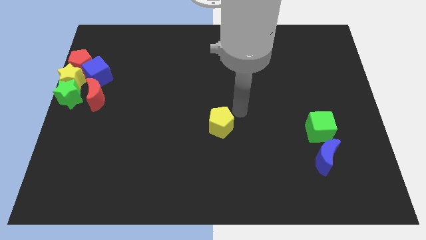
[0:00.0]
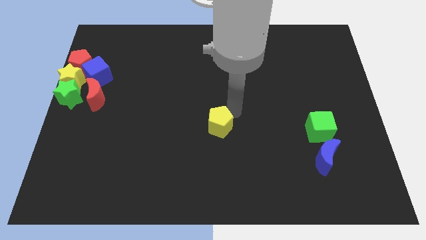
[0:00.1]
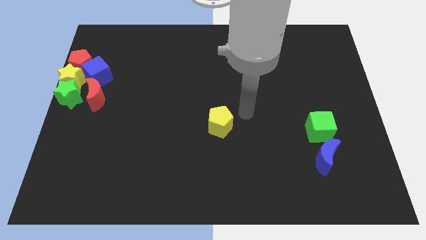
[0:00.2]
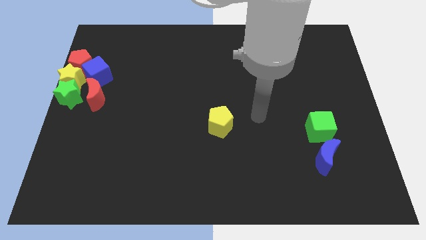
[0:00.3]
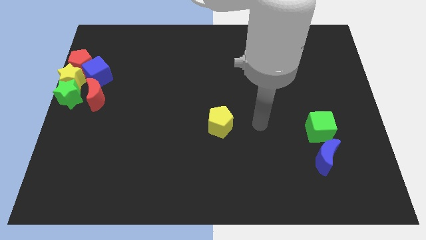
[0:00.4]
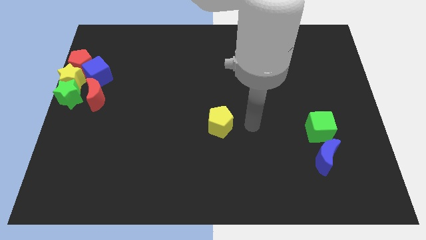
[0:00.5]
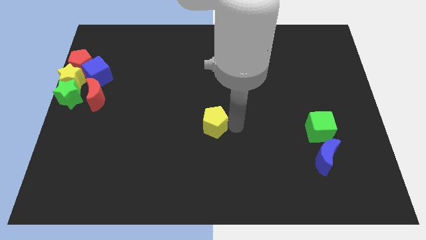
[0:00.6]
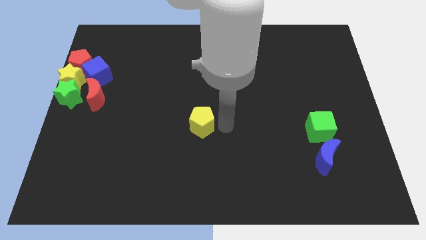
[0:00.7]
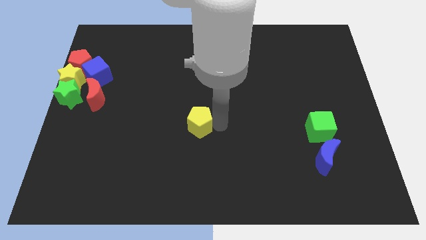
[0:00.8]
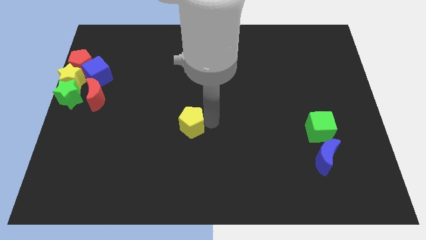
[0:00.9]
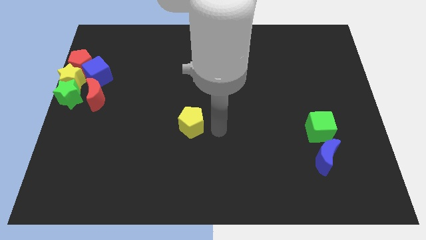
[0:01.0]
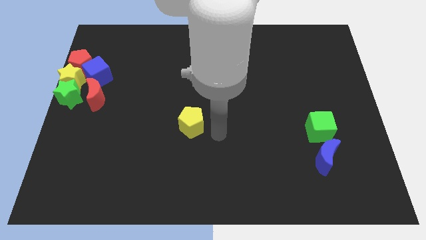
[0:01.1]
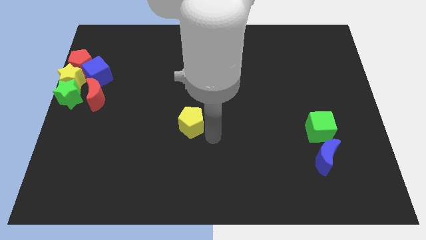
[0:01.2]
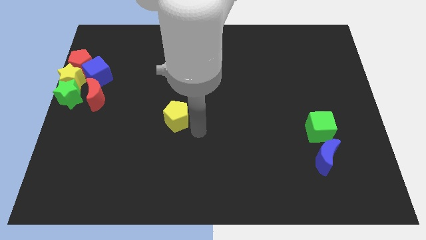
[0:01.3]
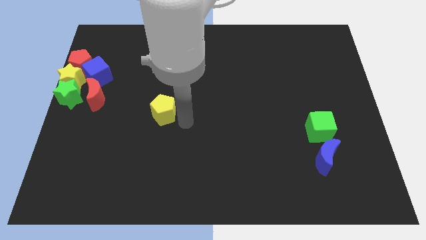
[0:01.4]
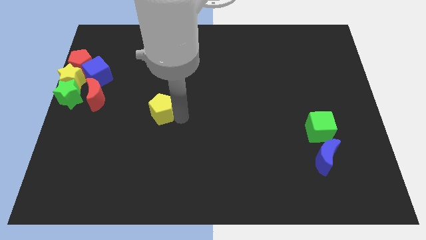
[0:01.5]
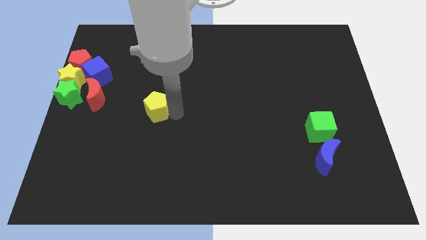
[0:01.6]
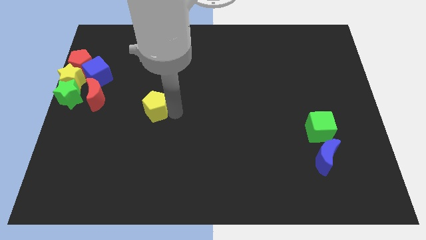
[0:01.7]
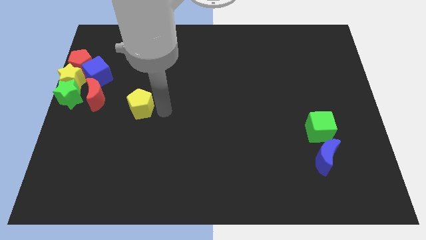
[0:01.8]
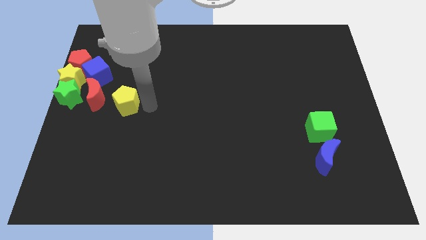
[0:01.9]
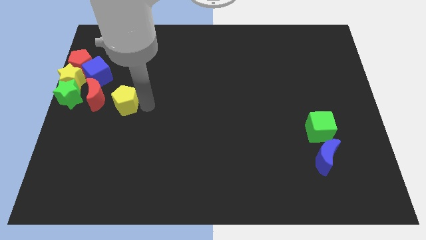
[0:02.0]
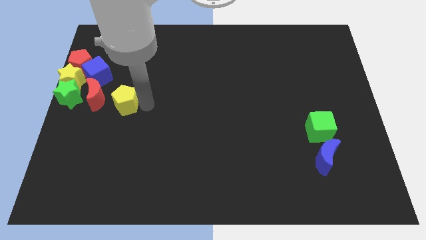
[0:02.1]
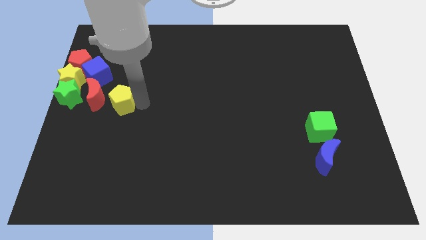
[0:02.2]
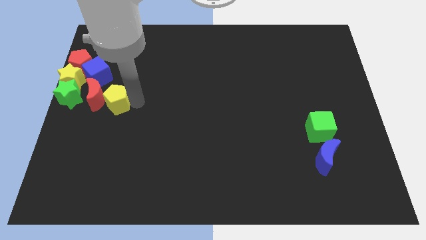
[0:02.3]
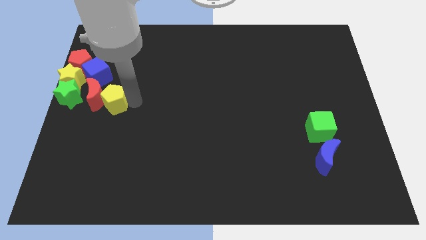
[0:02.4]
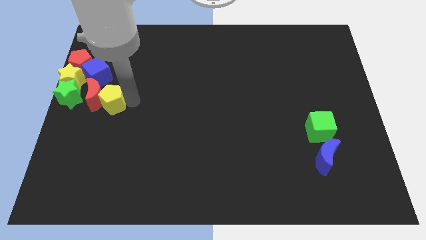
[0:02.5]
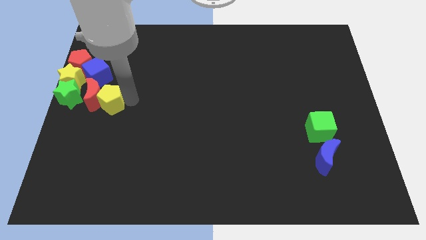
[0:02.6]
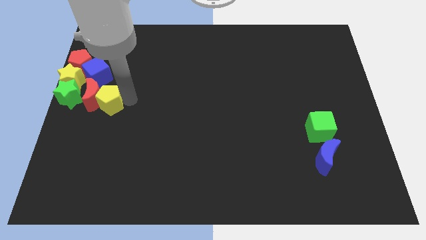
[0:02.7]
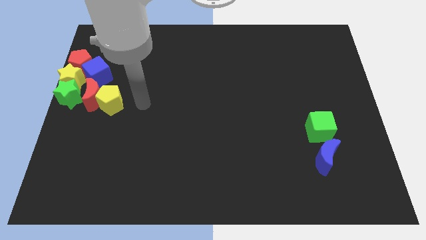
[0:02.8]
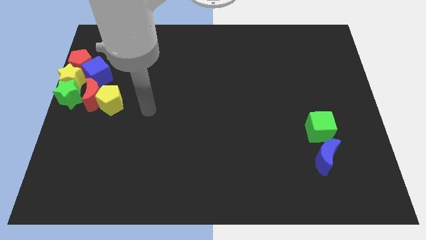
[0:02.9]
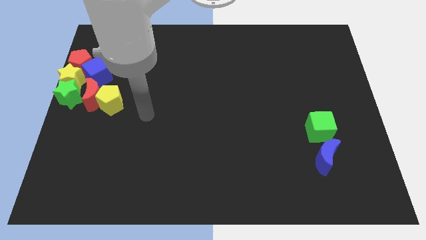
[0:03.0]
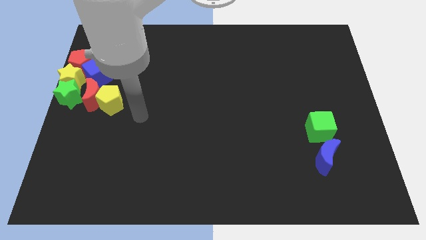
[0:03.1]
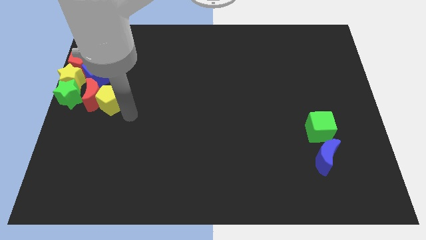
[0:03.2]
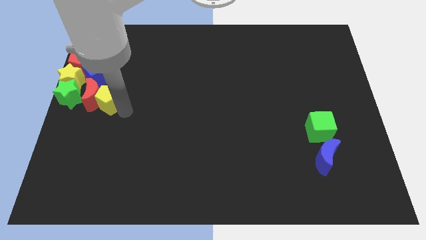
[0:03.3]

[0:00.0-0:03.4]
push the yellow pentagon towards the red crescent

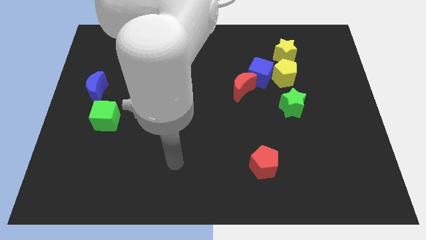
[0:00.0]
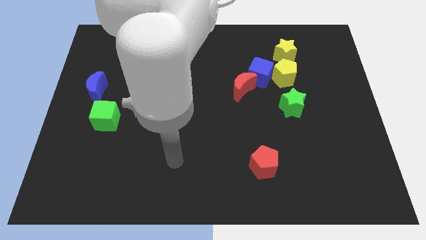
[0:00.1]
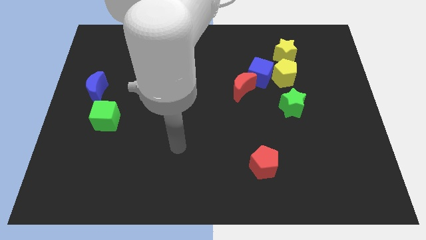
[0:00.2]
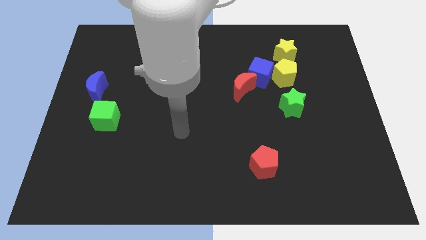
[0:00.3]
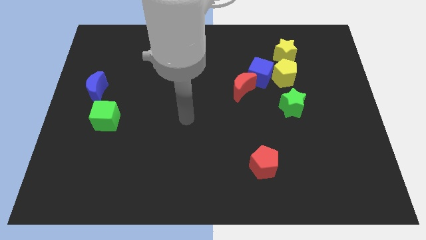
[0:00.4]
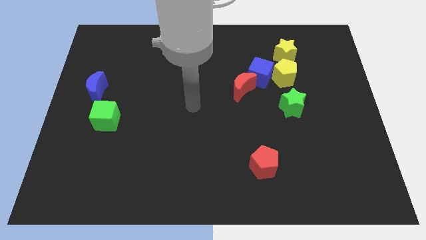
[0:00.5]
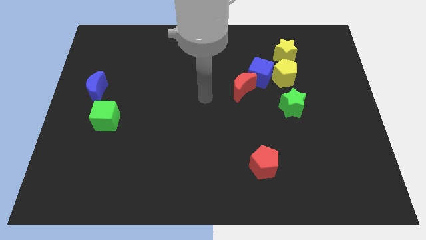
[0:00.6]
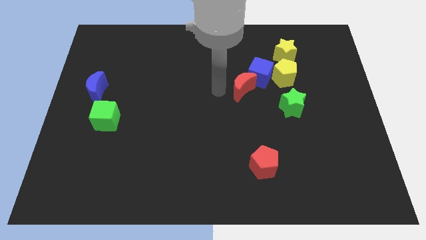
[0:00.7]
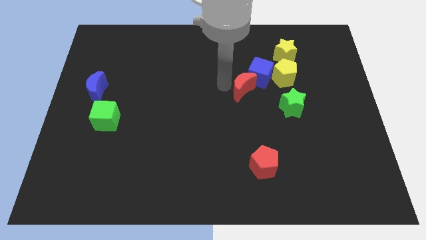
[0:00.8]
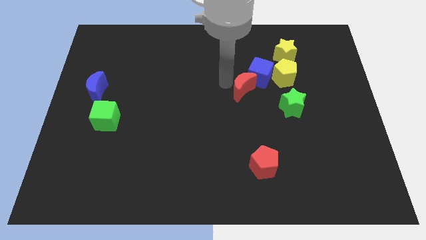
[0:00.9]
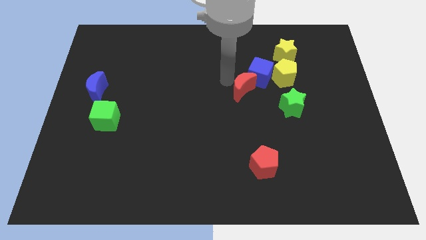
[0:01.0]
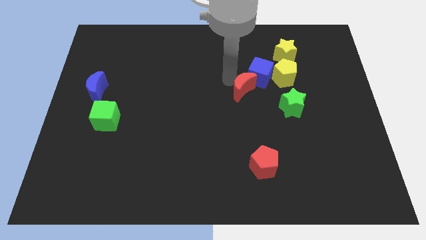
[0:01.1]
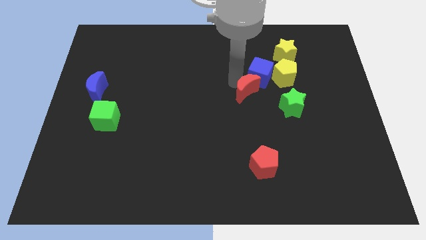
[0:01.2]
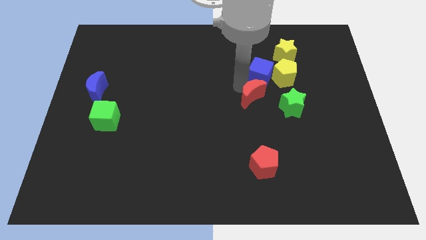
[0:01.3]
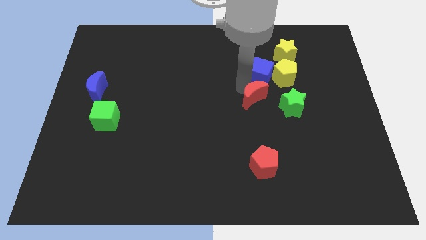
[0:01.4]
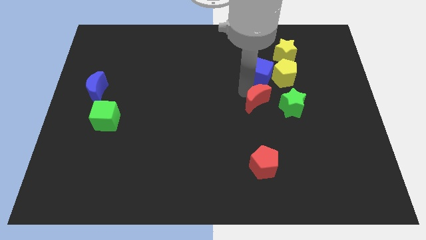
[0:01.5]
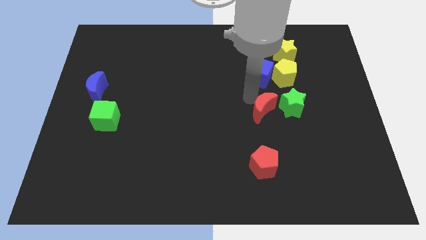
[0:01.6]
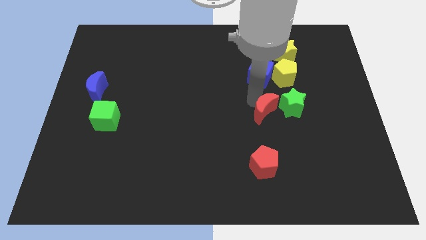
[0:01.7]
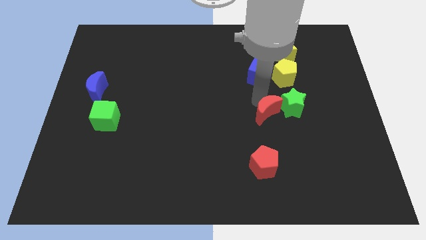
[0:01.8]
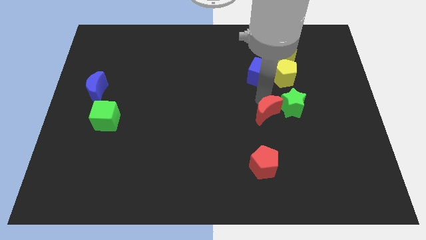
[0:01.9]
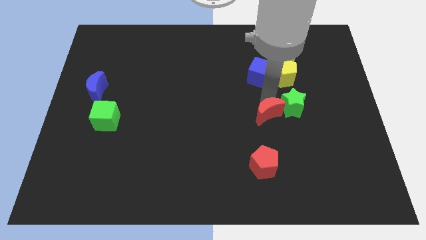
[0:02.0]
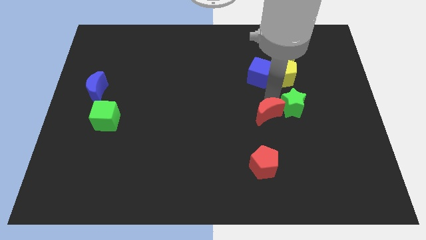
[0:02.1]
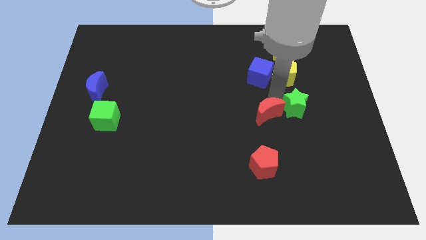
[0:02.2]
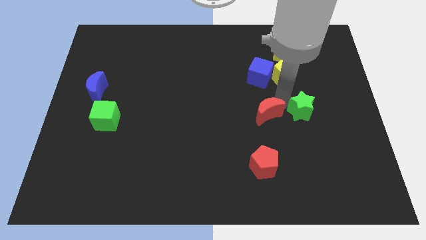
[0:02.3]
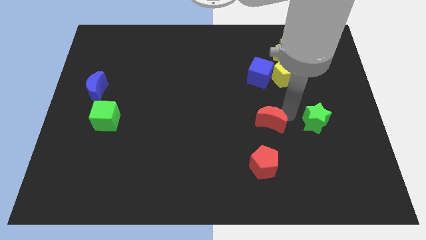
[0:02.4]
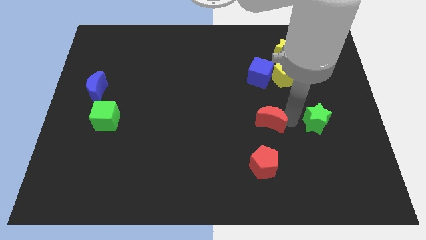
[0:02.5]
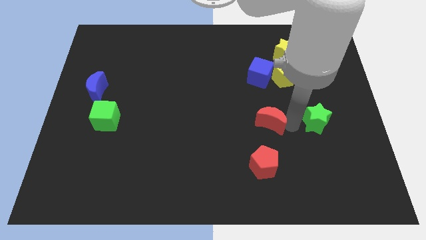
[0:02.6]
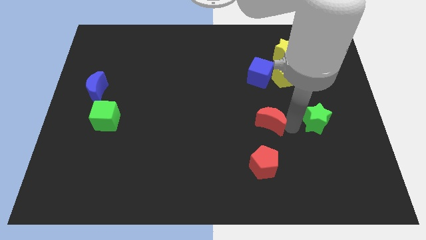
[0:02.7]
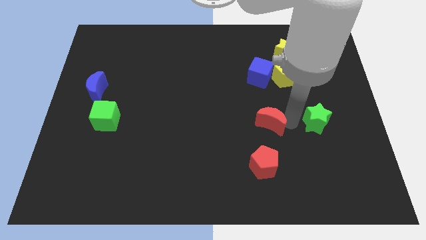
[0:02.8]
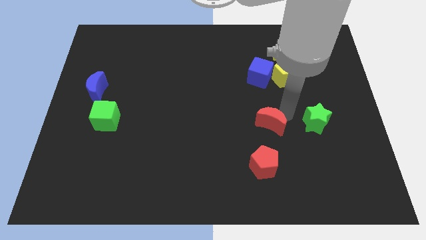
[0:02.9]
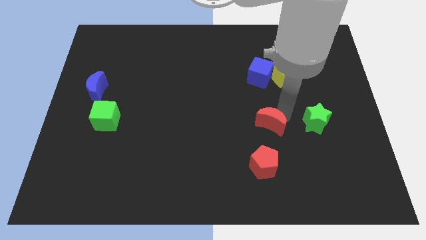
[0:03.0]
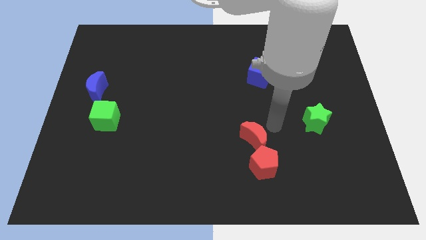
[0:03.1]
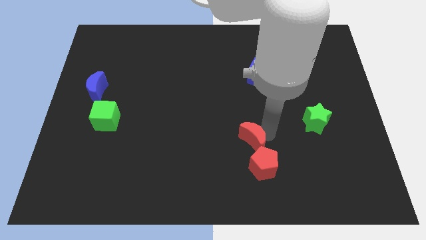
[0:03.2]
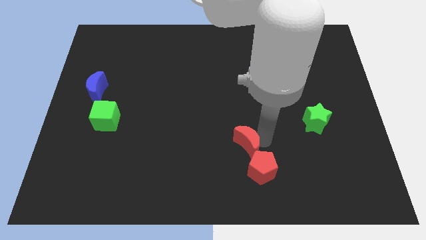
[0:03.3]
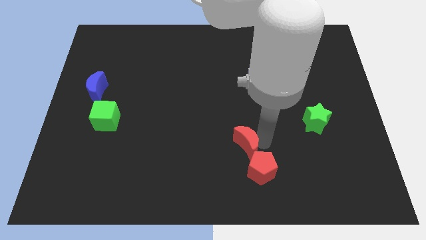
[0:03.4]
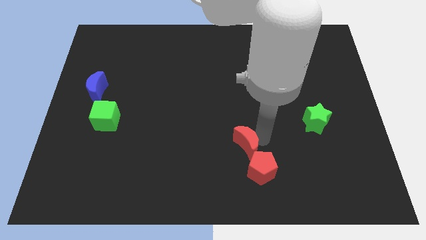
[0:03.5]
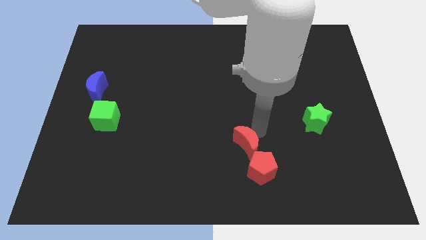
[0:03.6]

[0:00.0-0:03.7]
place the red crescent above the red pentagon

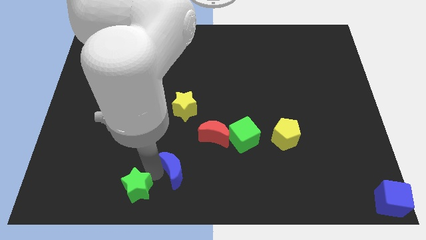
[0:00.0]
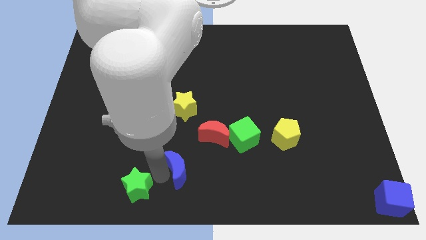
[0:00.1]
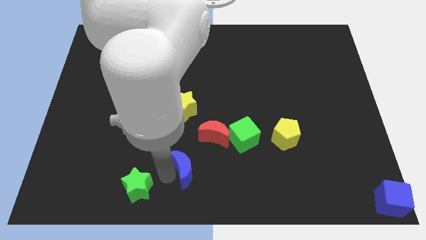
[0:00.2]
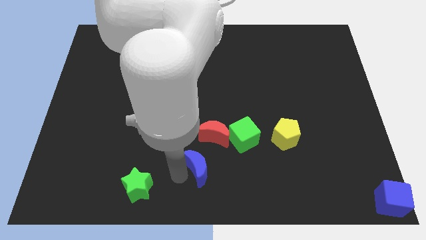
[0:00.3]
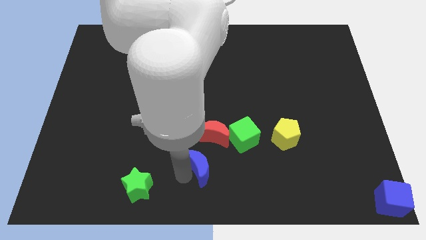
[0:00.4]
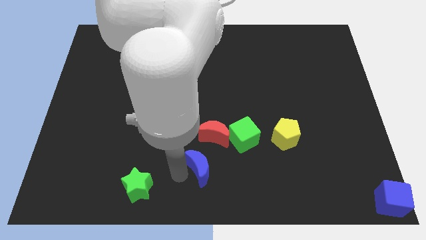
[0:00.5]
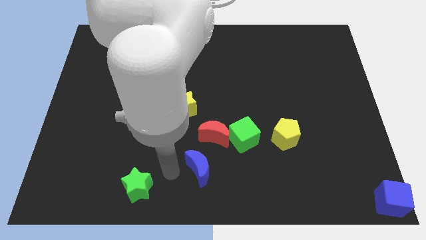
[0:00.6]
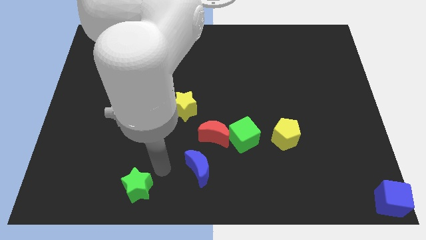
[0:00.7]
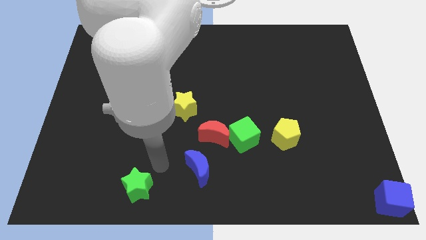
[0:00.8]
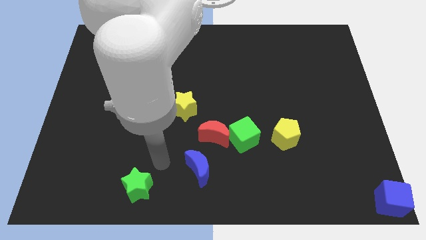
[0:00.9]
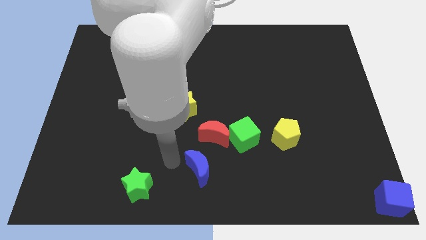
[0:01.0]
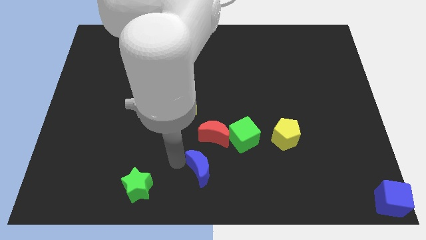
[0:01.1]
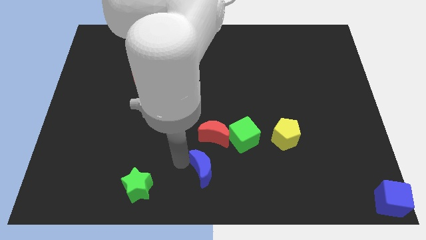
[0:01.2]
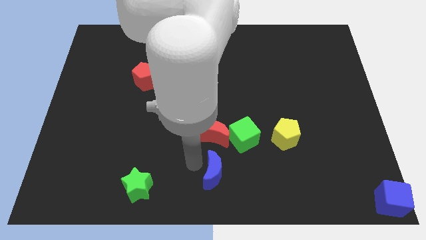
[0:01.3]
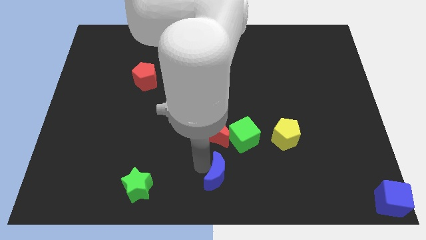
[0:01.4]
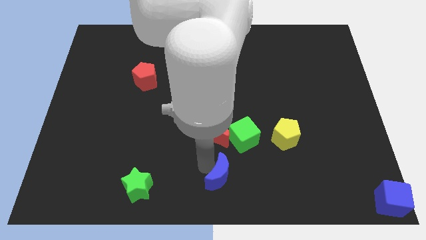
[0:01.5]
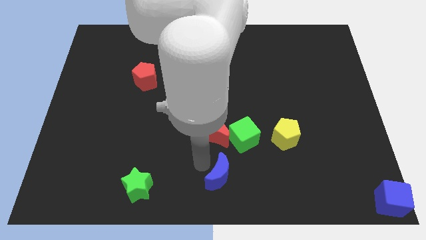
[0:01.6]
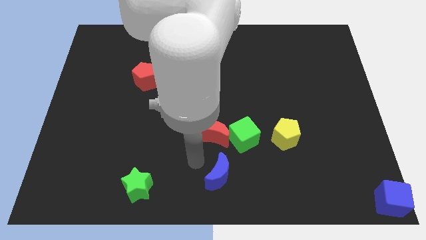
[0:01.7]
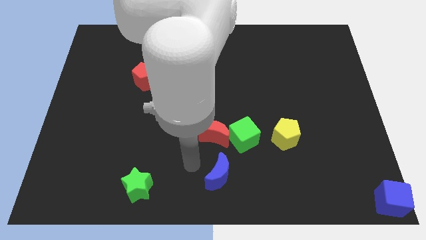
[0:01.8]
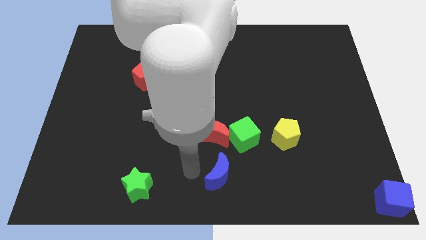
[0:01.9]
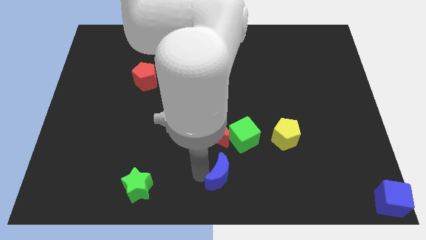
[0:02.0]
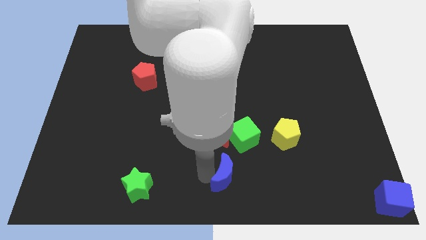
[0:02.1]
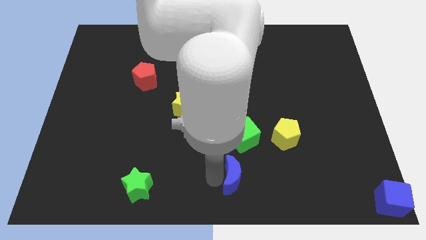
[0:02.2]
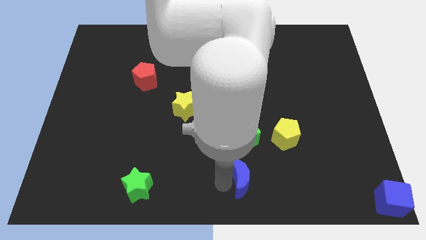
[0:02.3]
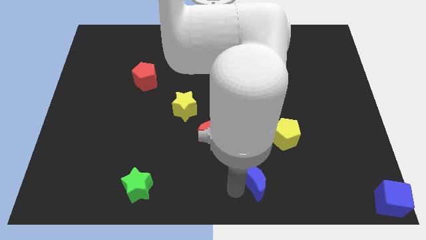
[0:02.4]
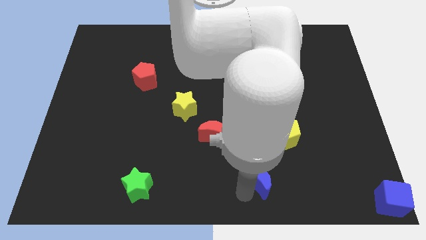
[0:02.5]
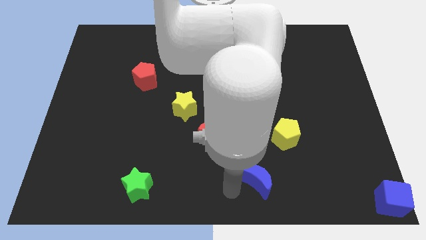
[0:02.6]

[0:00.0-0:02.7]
move the blue crescent to the bottom of the green cube
